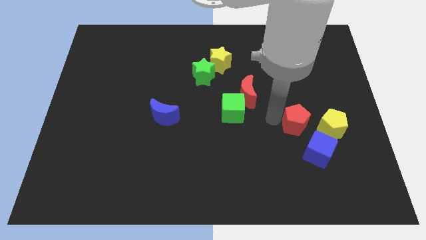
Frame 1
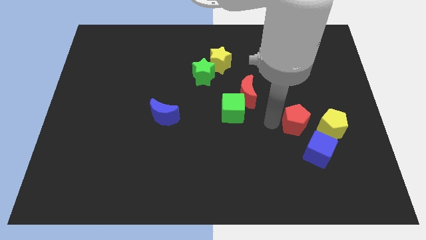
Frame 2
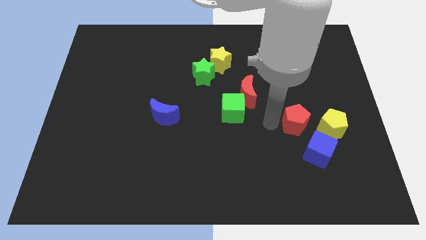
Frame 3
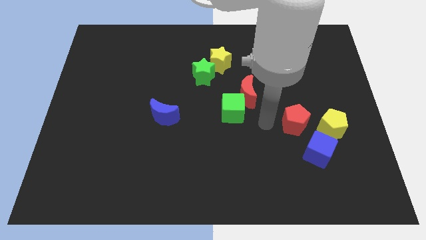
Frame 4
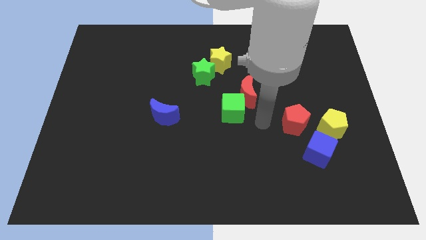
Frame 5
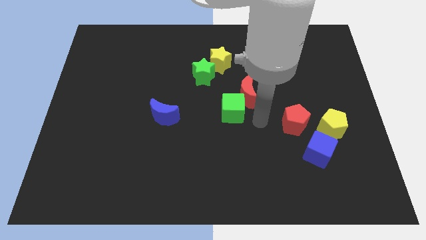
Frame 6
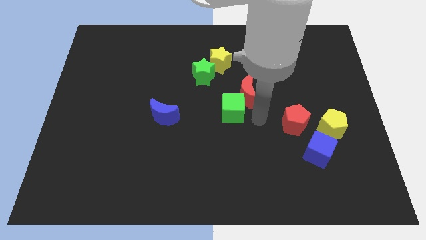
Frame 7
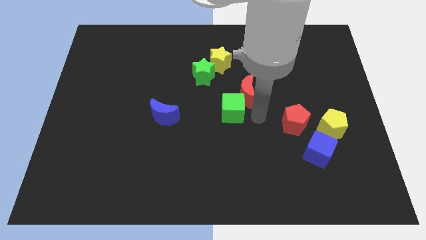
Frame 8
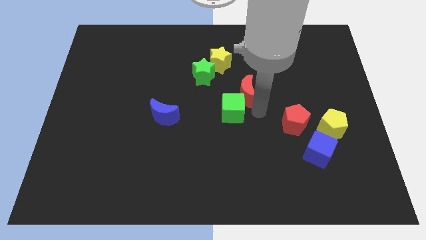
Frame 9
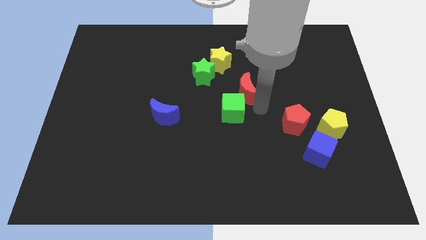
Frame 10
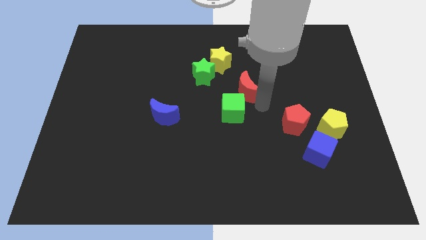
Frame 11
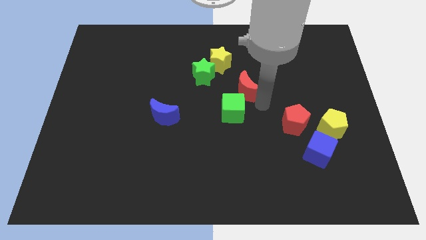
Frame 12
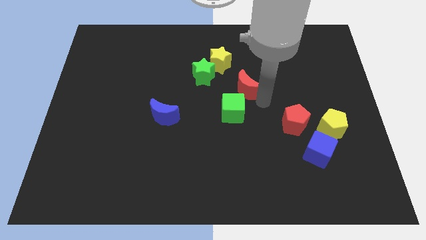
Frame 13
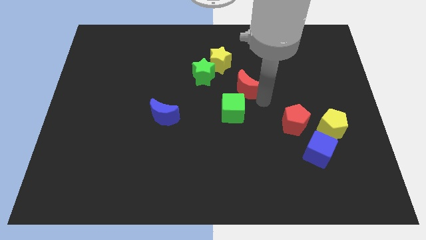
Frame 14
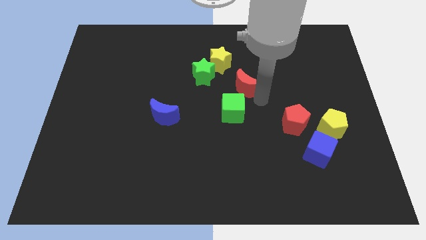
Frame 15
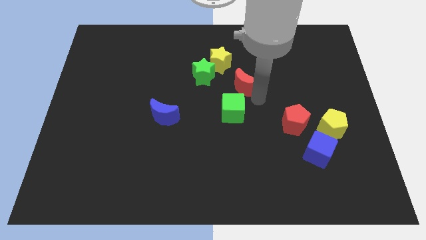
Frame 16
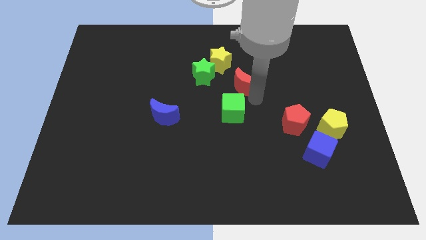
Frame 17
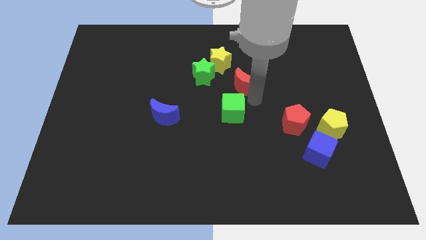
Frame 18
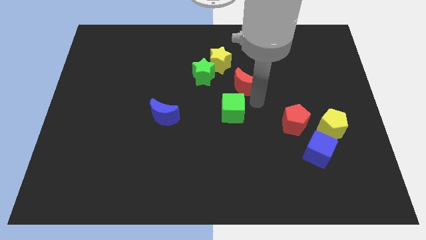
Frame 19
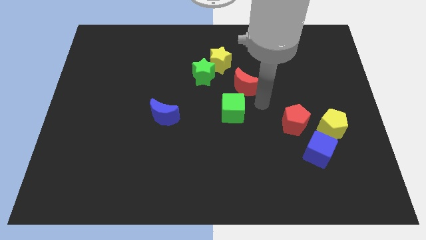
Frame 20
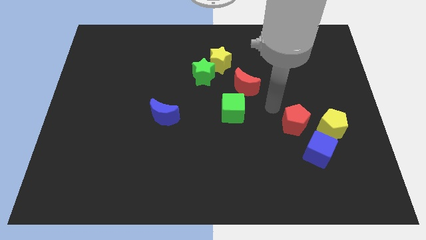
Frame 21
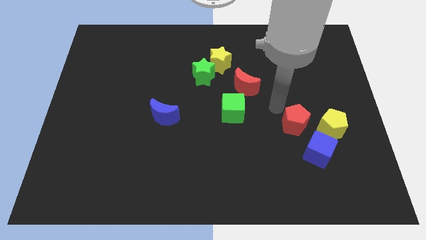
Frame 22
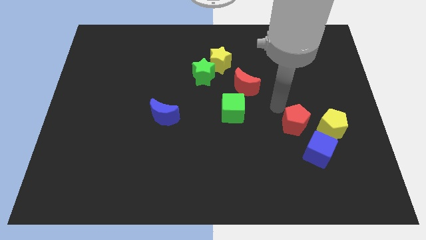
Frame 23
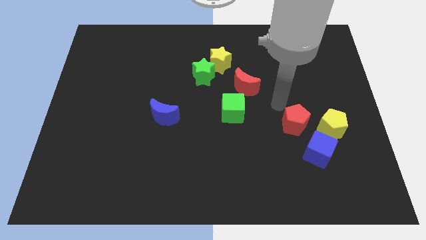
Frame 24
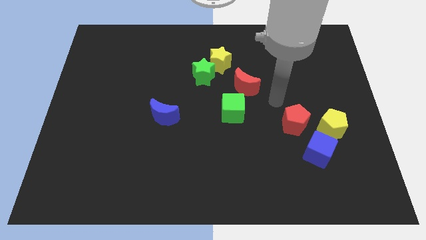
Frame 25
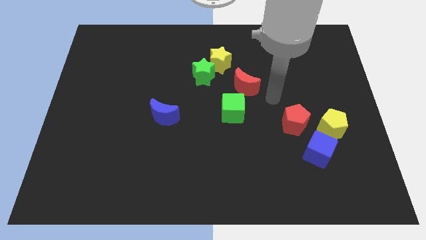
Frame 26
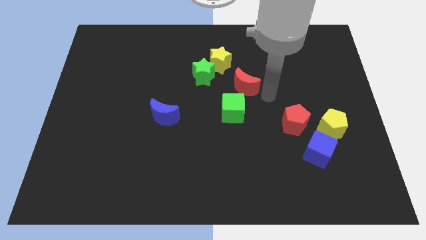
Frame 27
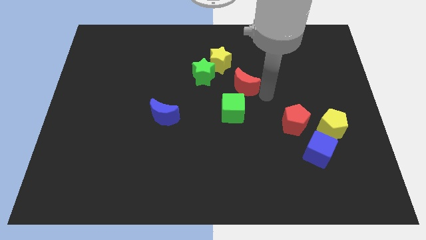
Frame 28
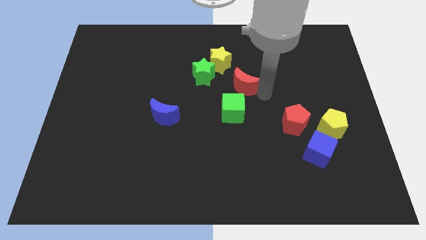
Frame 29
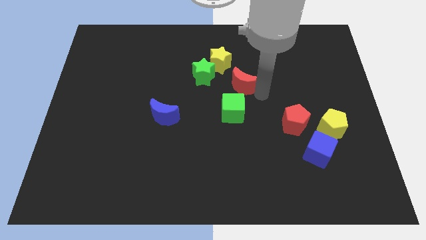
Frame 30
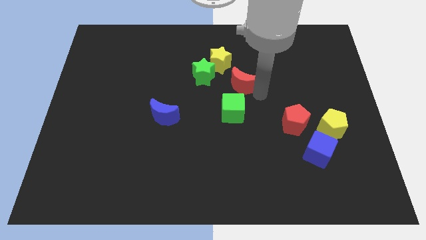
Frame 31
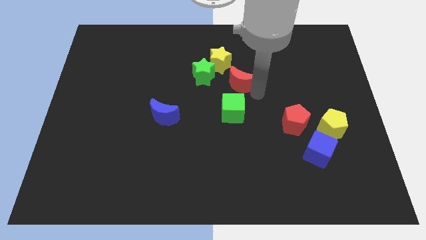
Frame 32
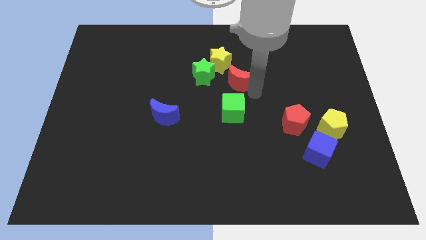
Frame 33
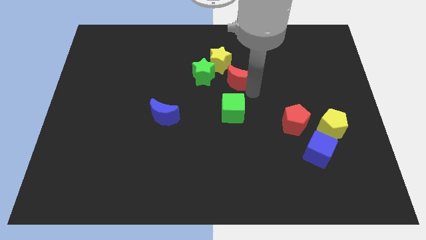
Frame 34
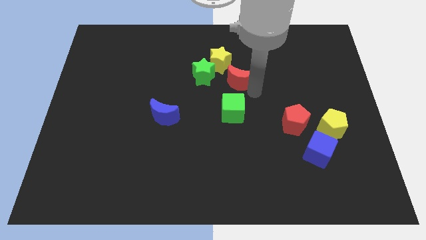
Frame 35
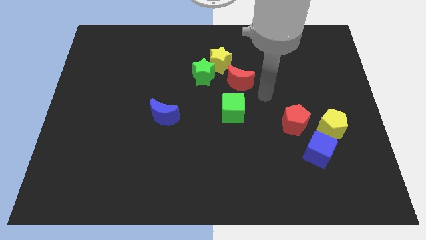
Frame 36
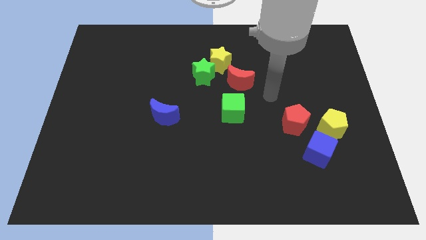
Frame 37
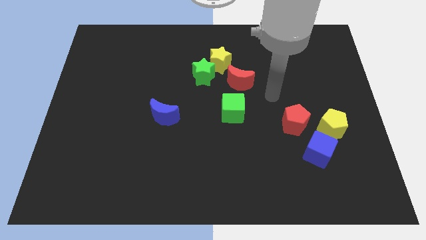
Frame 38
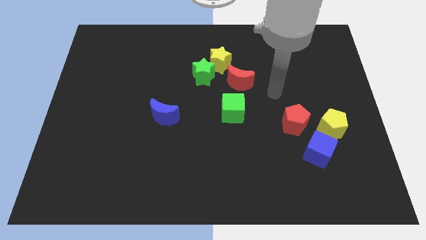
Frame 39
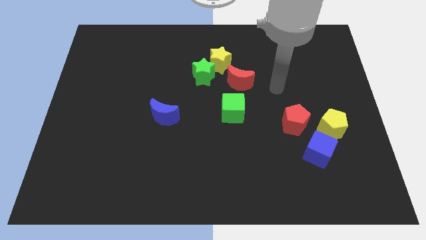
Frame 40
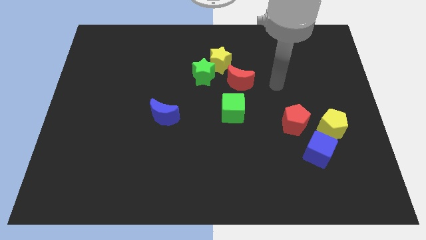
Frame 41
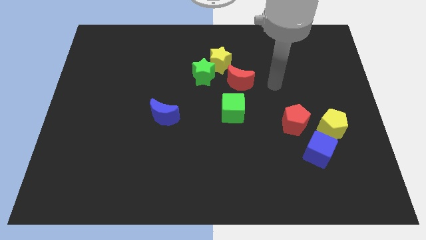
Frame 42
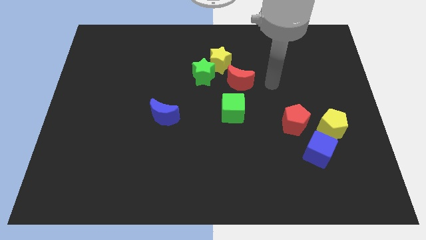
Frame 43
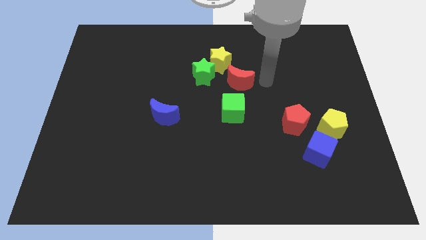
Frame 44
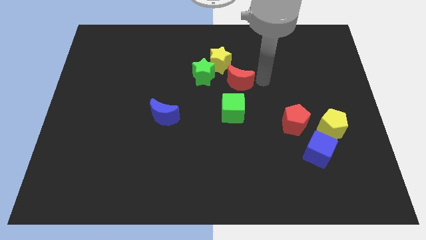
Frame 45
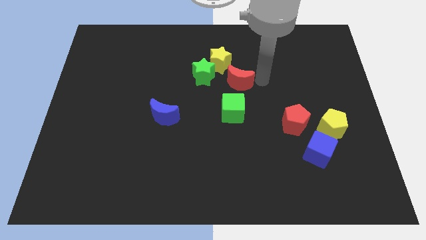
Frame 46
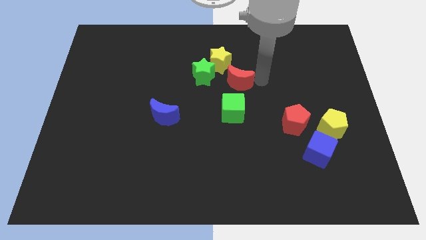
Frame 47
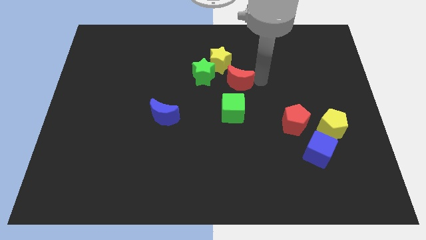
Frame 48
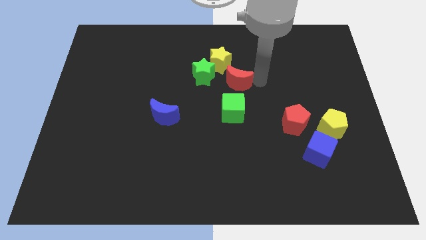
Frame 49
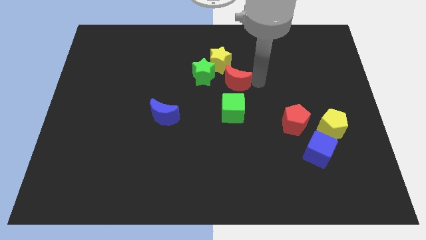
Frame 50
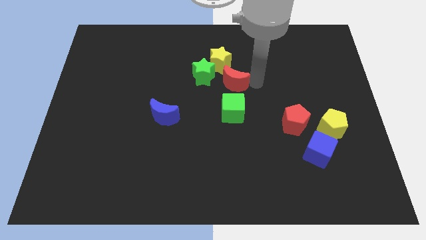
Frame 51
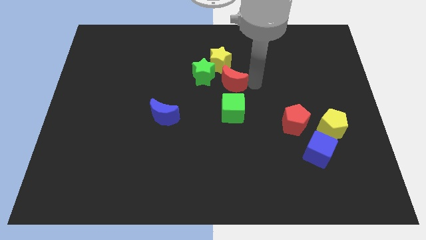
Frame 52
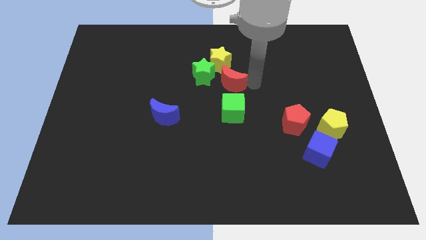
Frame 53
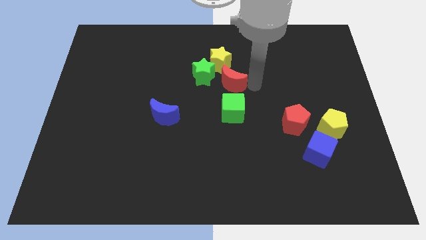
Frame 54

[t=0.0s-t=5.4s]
push the red crescent to the top of the green cube

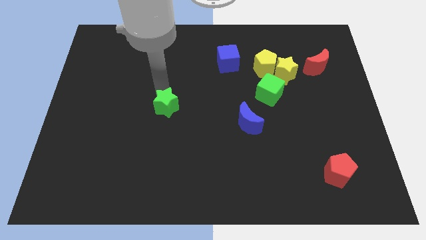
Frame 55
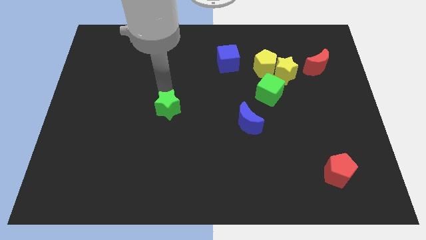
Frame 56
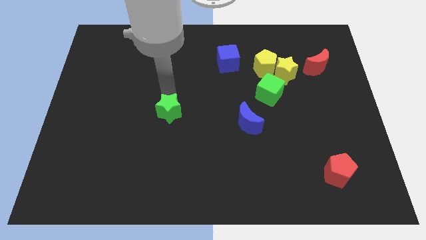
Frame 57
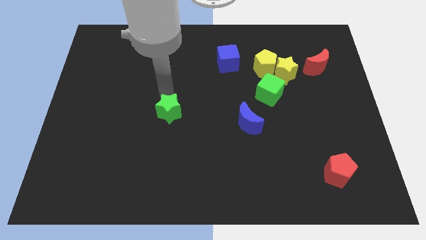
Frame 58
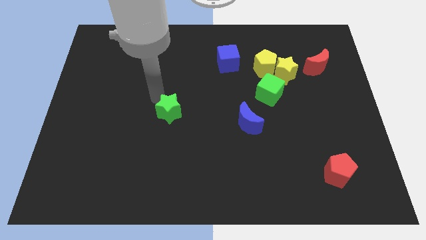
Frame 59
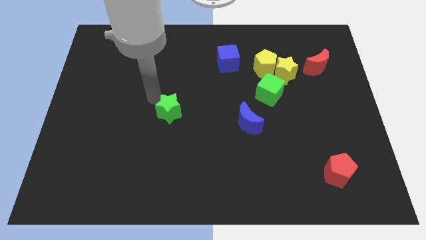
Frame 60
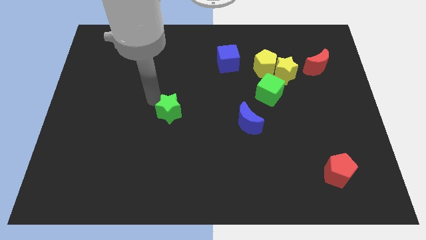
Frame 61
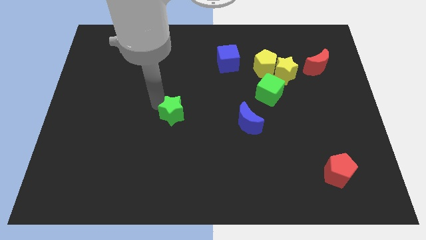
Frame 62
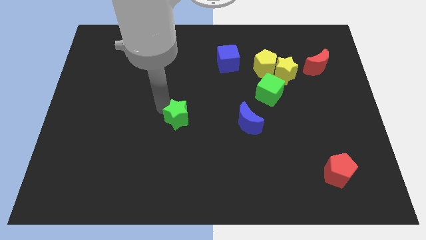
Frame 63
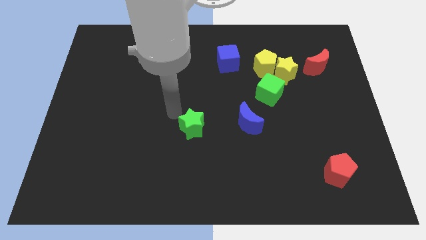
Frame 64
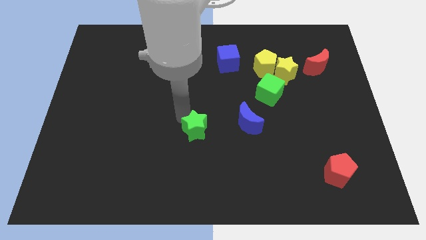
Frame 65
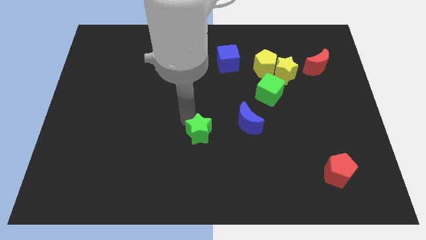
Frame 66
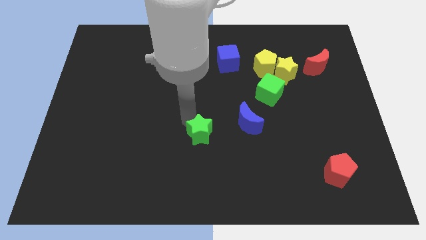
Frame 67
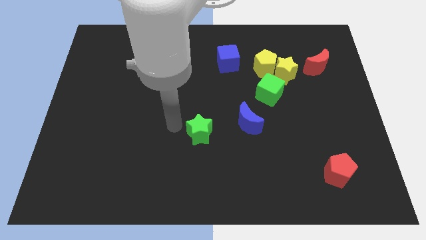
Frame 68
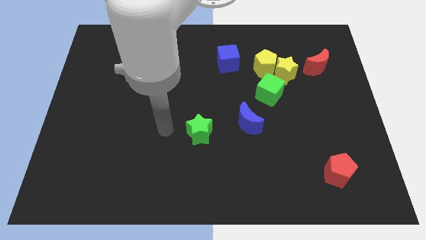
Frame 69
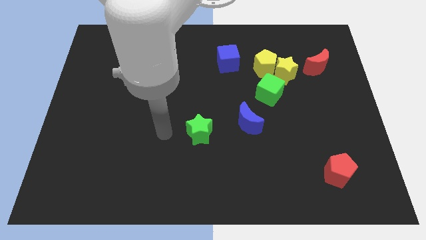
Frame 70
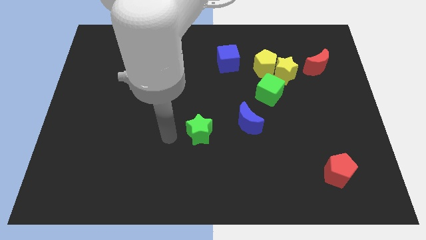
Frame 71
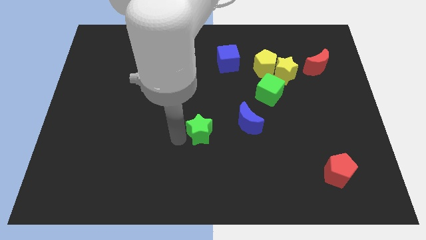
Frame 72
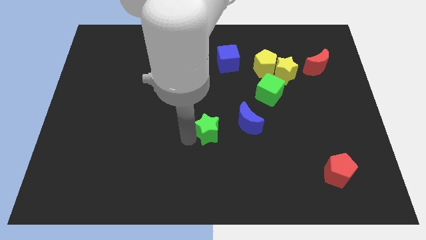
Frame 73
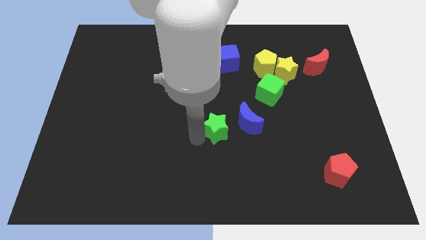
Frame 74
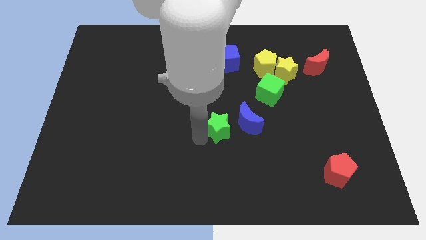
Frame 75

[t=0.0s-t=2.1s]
move the green star to the left of the blue crescent

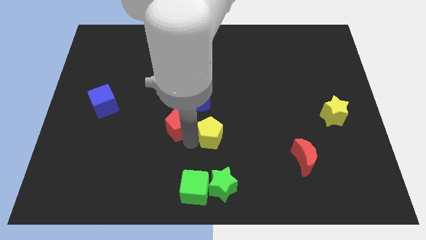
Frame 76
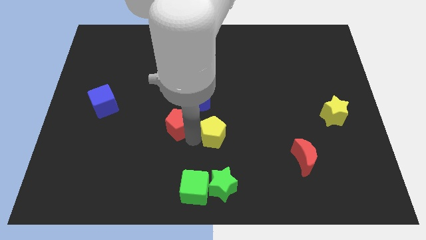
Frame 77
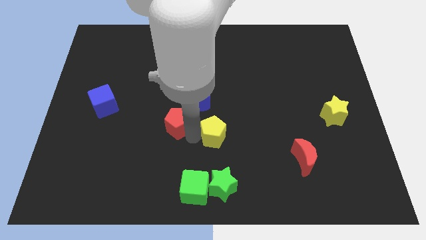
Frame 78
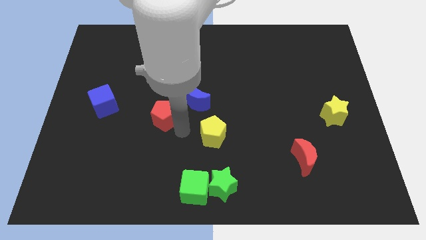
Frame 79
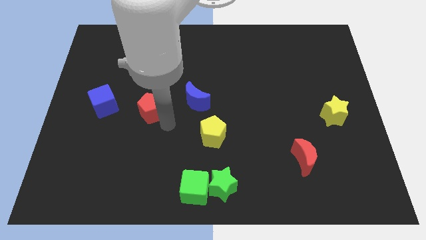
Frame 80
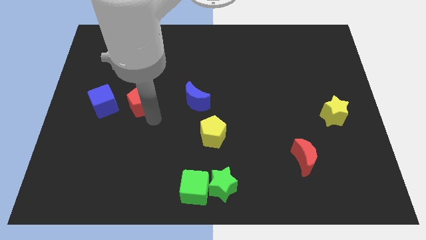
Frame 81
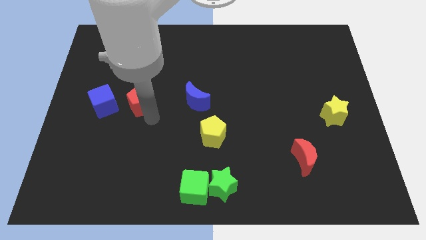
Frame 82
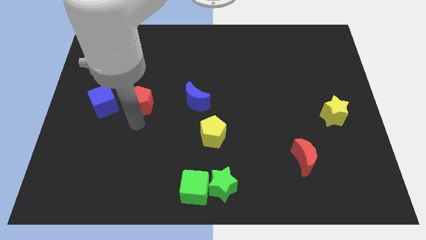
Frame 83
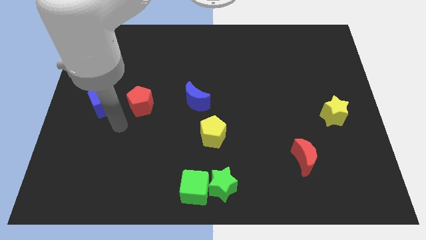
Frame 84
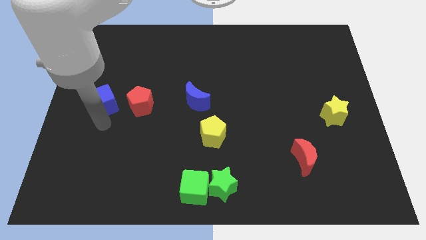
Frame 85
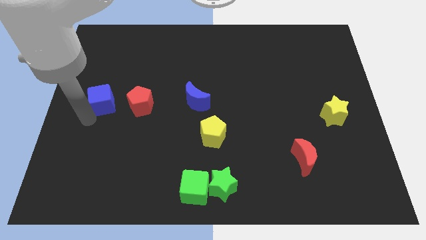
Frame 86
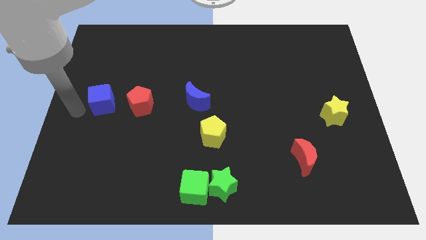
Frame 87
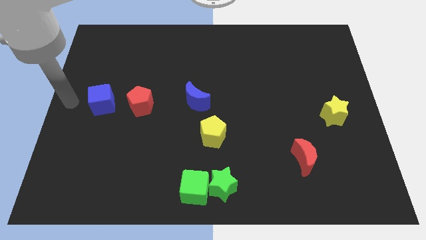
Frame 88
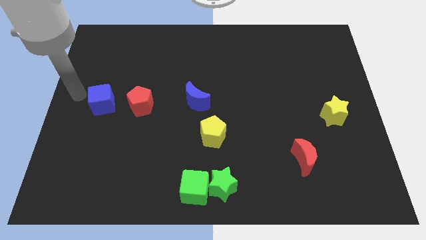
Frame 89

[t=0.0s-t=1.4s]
place the red pentagon to the right side of the blue cube
